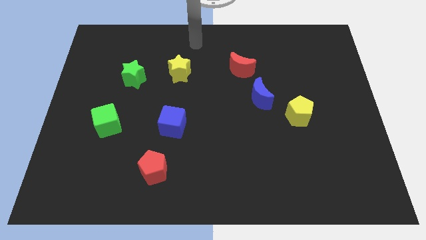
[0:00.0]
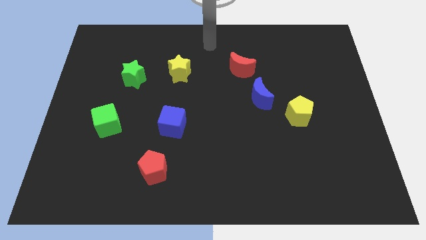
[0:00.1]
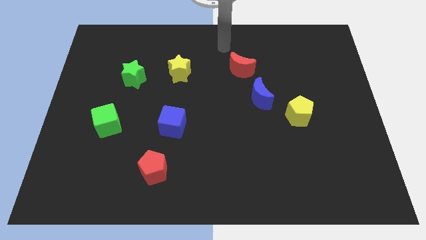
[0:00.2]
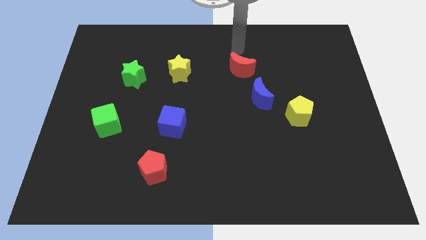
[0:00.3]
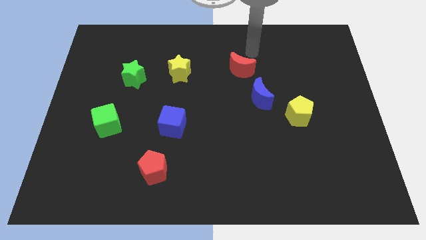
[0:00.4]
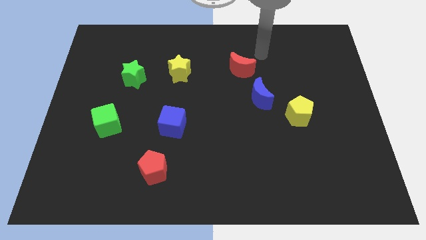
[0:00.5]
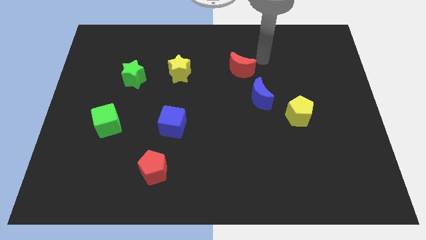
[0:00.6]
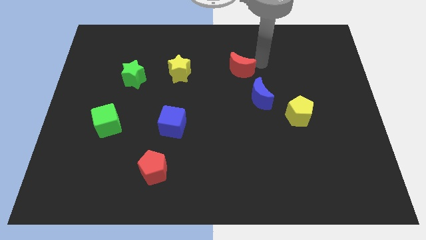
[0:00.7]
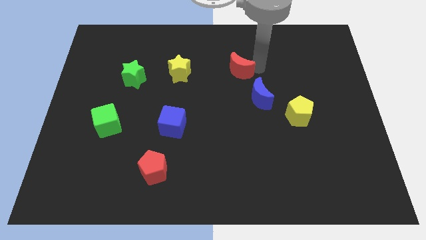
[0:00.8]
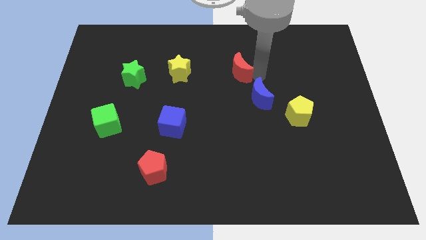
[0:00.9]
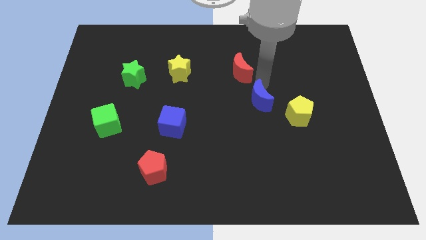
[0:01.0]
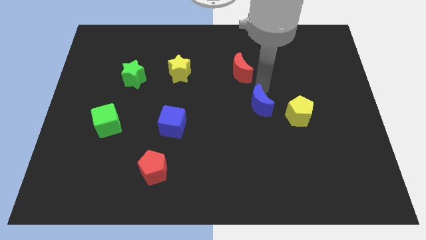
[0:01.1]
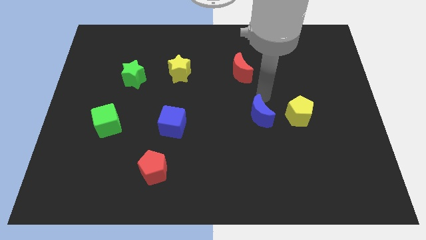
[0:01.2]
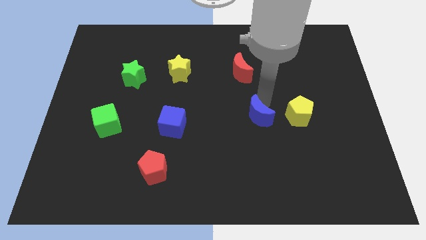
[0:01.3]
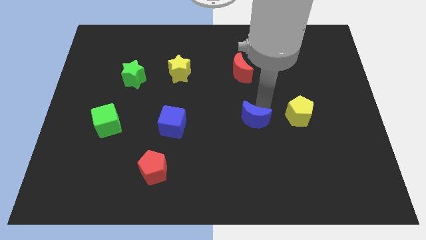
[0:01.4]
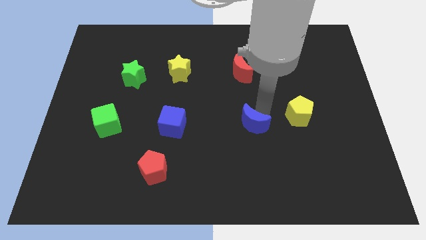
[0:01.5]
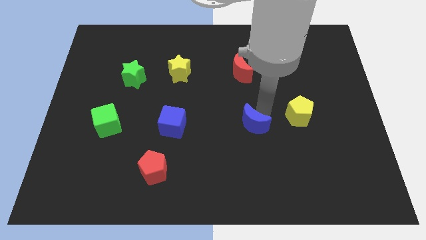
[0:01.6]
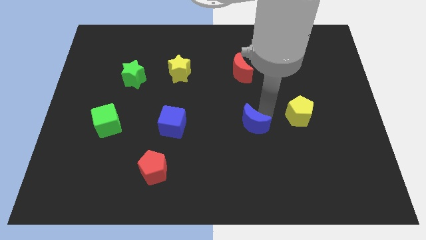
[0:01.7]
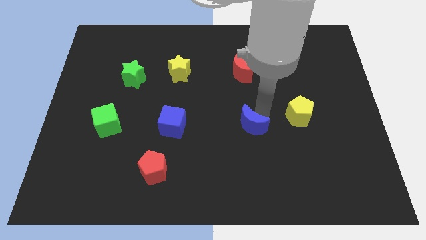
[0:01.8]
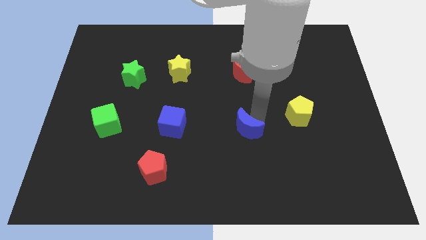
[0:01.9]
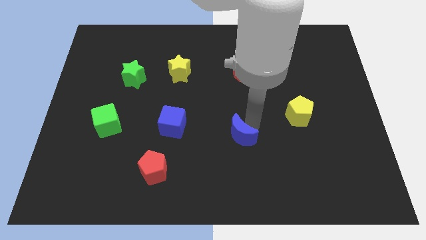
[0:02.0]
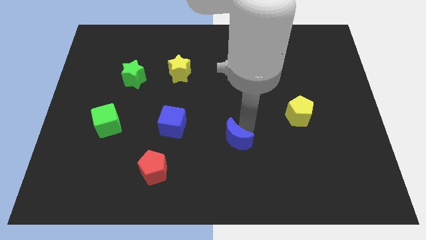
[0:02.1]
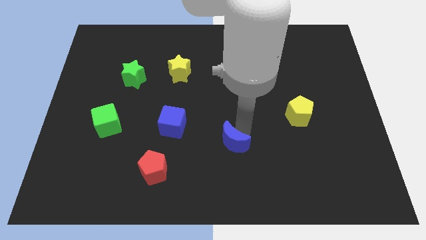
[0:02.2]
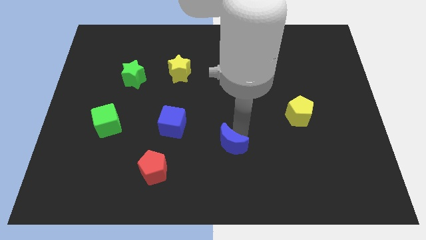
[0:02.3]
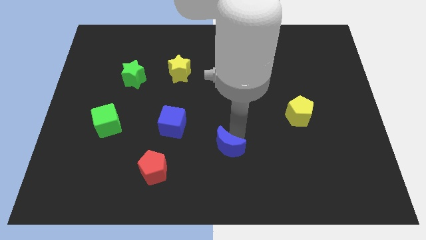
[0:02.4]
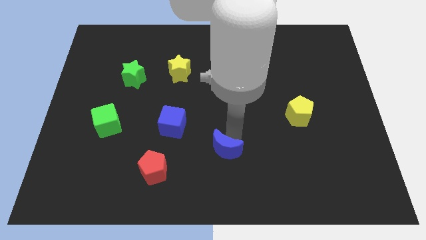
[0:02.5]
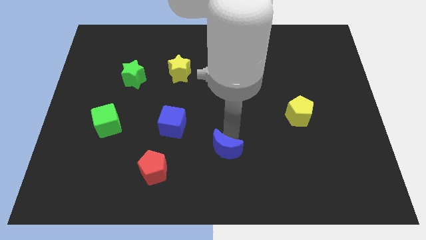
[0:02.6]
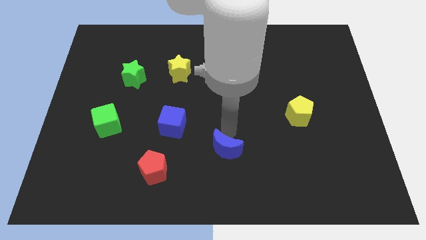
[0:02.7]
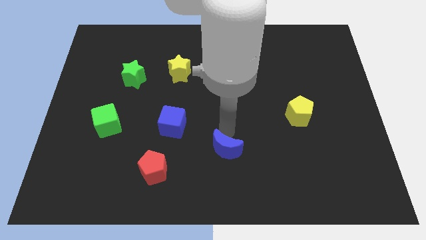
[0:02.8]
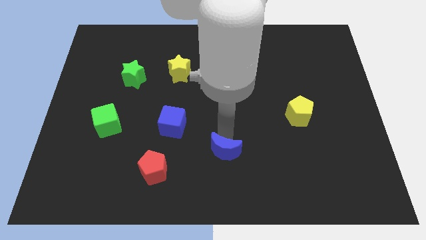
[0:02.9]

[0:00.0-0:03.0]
place the blue moon diagonally top right to the red pentagon

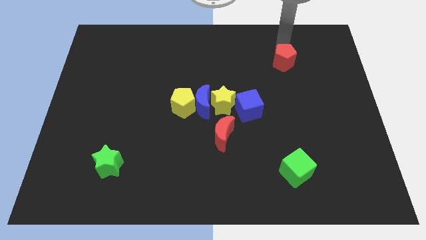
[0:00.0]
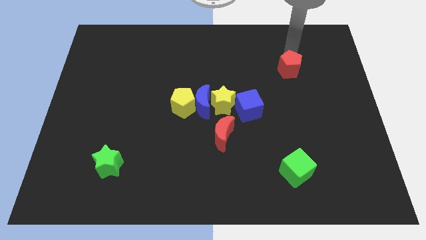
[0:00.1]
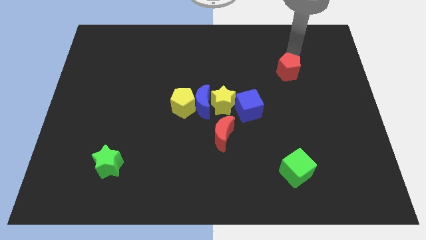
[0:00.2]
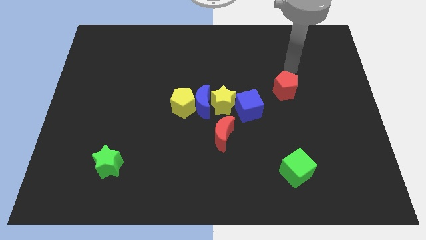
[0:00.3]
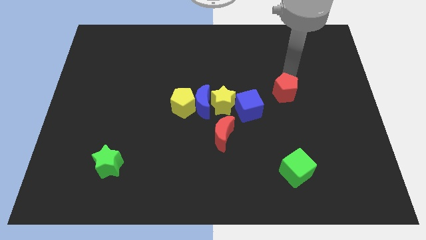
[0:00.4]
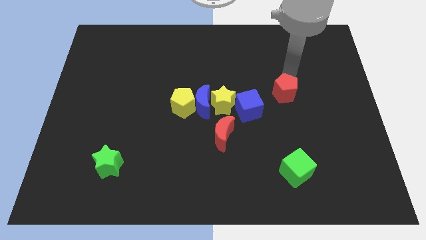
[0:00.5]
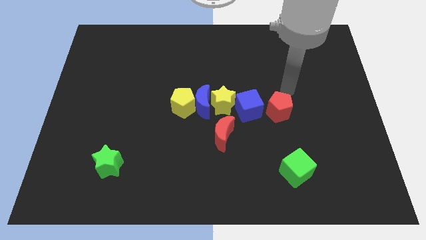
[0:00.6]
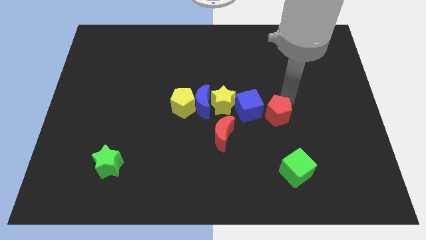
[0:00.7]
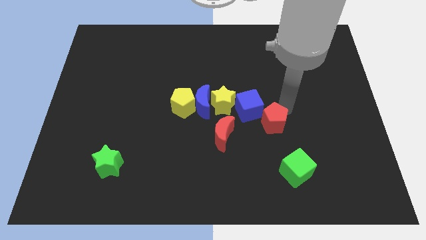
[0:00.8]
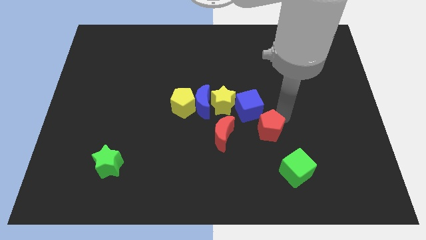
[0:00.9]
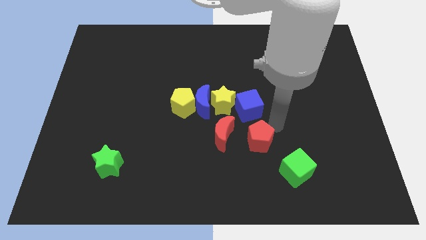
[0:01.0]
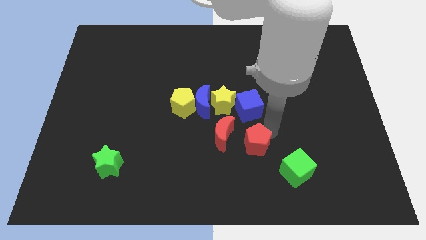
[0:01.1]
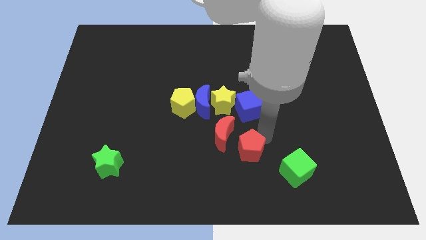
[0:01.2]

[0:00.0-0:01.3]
move the red pentagon near the red crescent

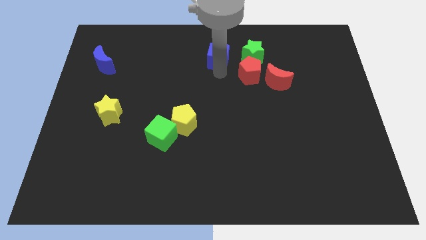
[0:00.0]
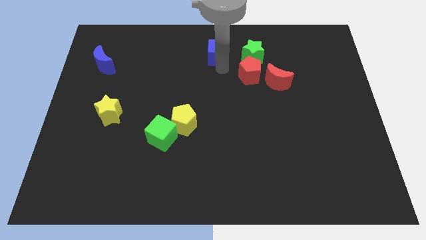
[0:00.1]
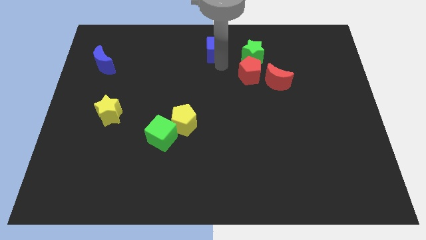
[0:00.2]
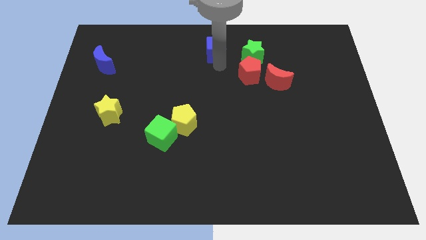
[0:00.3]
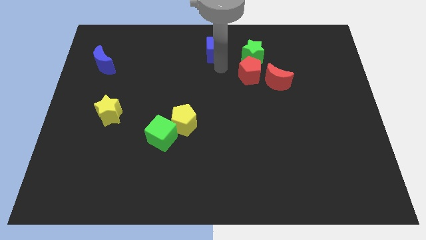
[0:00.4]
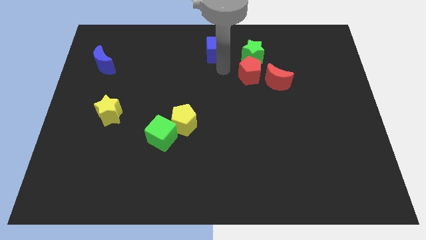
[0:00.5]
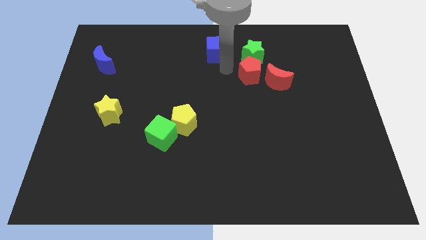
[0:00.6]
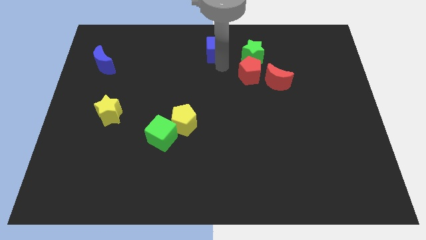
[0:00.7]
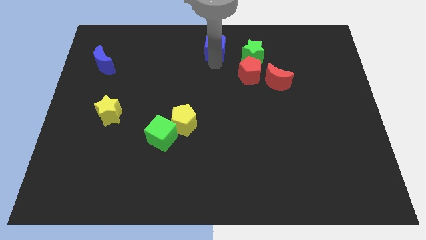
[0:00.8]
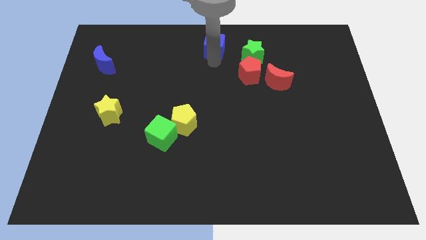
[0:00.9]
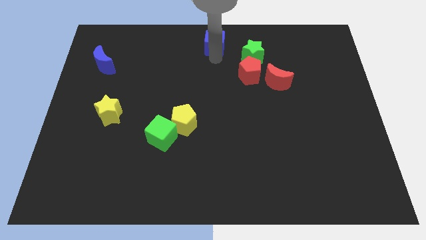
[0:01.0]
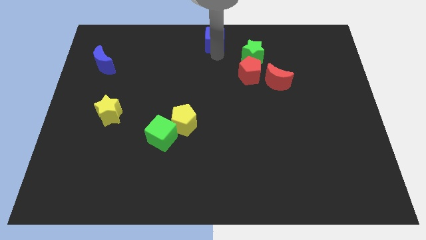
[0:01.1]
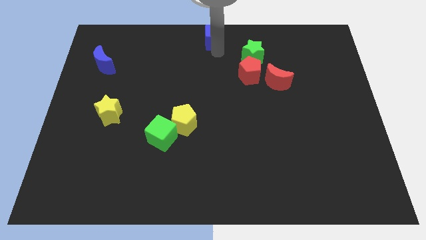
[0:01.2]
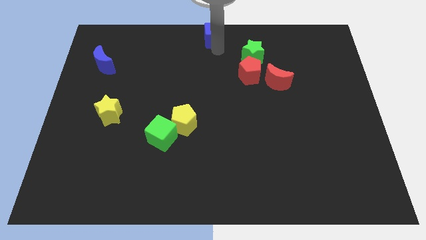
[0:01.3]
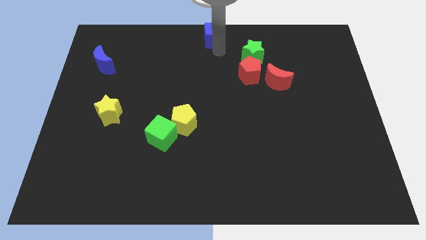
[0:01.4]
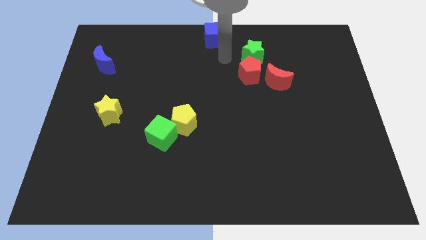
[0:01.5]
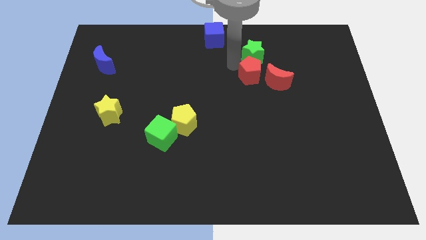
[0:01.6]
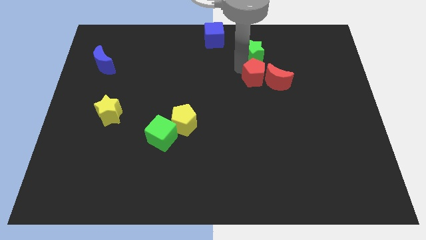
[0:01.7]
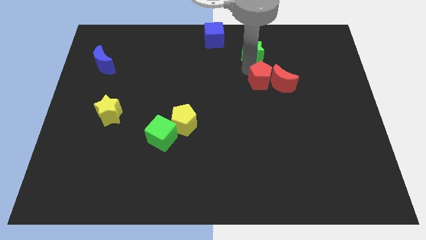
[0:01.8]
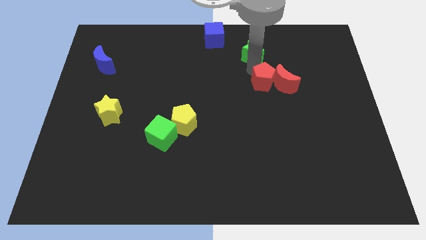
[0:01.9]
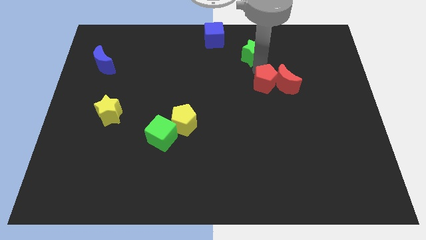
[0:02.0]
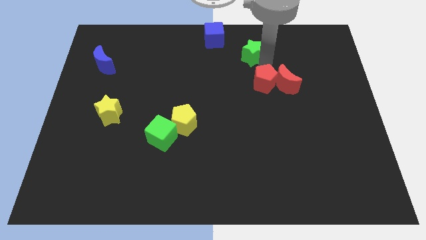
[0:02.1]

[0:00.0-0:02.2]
move the blue cube to the top center of the board

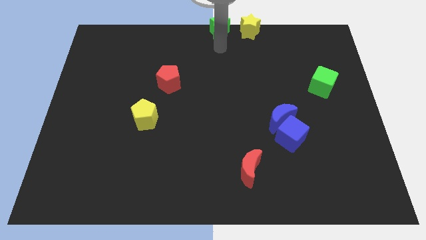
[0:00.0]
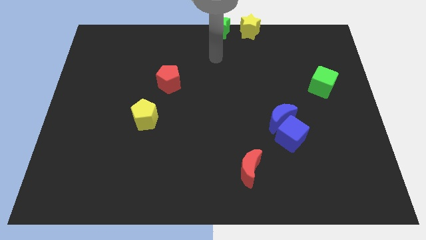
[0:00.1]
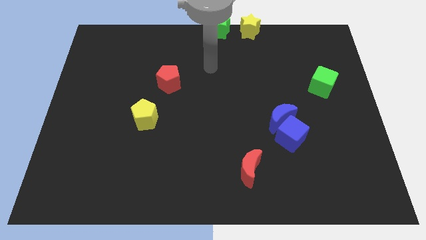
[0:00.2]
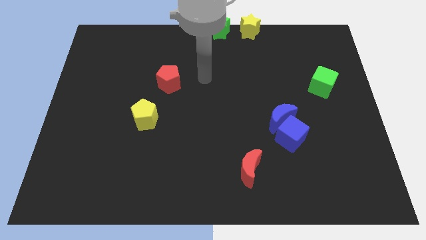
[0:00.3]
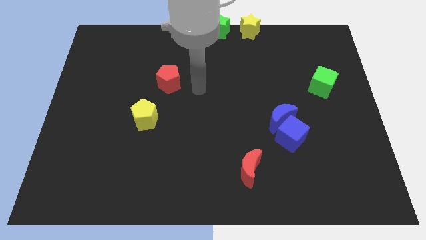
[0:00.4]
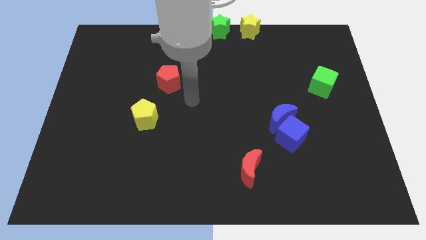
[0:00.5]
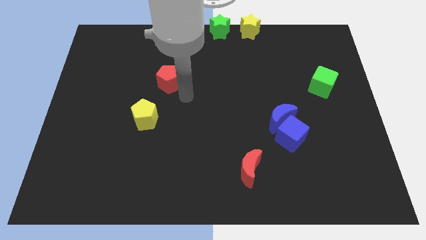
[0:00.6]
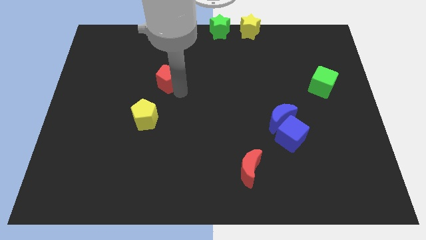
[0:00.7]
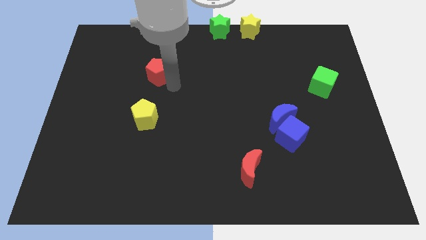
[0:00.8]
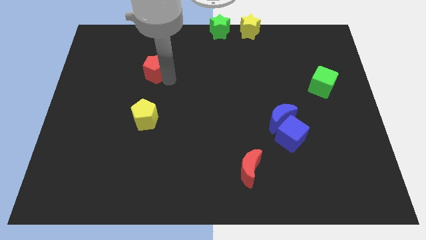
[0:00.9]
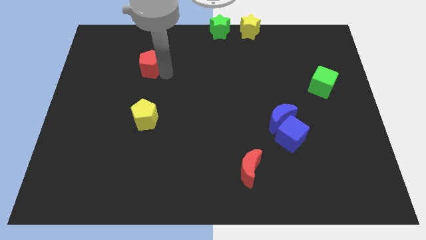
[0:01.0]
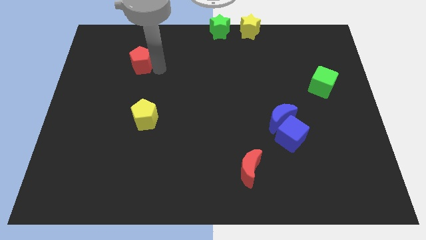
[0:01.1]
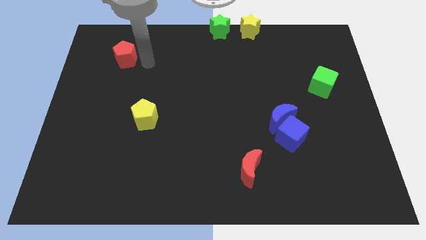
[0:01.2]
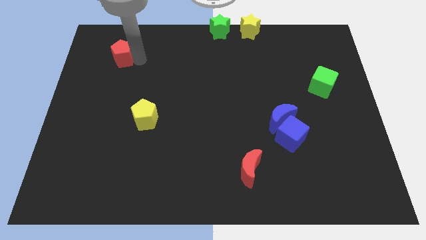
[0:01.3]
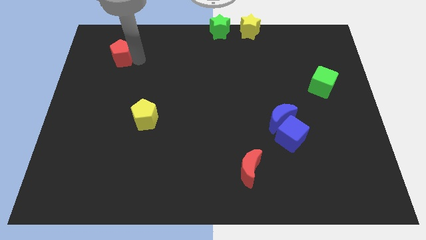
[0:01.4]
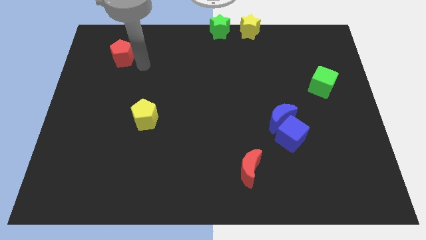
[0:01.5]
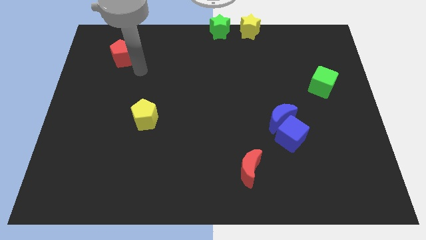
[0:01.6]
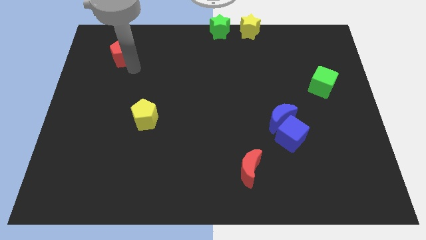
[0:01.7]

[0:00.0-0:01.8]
move the red pentagon diagonal left of yellow pentagon

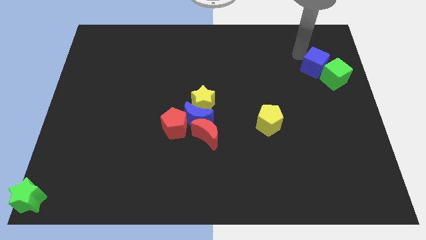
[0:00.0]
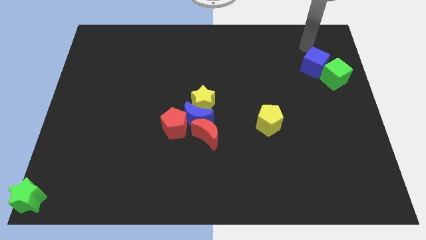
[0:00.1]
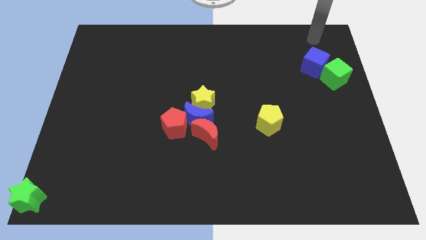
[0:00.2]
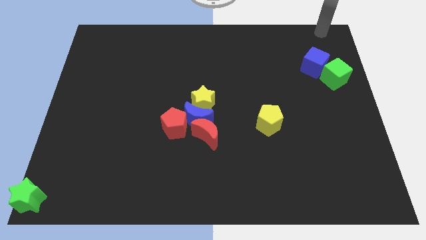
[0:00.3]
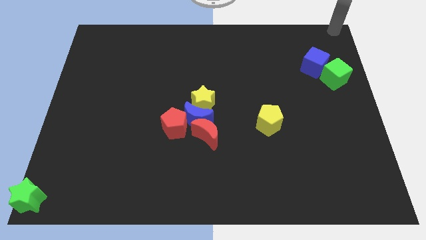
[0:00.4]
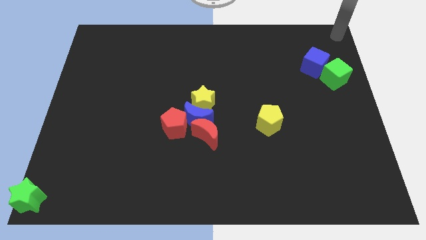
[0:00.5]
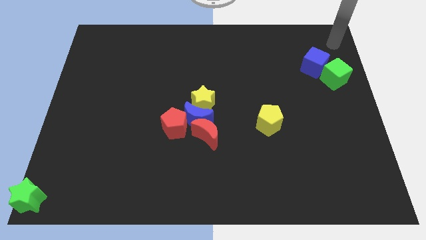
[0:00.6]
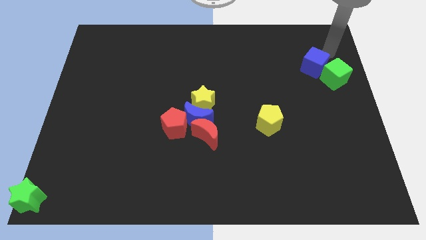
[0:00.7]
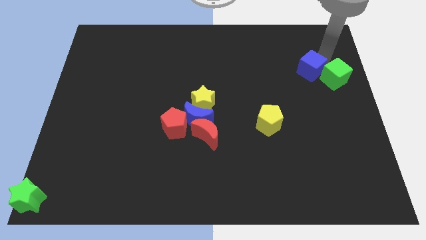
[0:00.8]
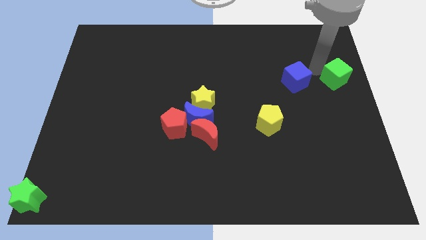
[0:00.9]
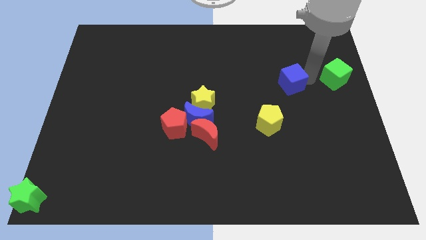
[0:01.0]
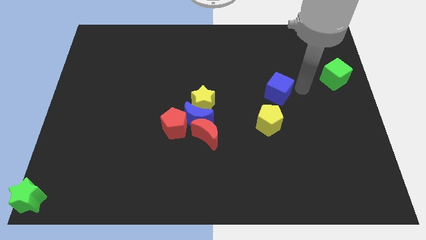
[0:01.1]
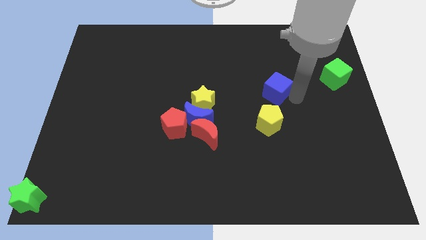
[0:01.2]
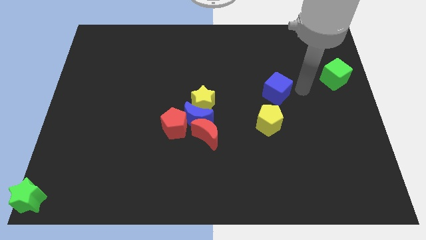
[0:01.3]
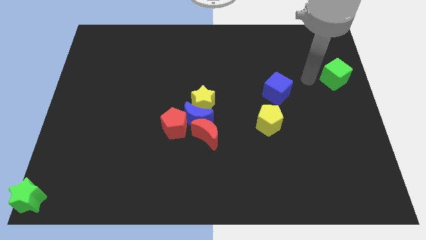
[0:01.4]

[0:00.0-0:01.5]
put the blue cube at the top of yellow pentagon
